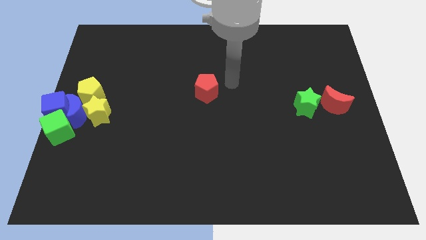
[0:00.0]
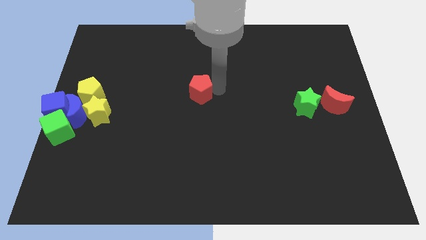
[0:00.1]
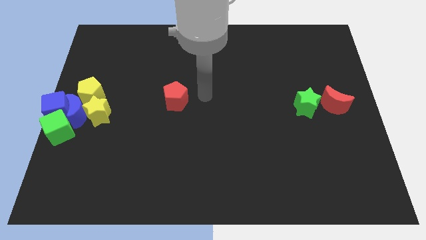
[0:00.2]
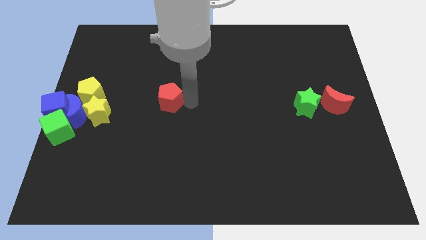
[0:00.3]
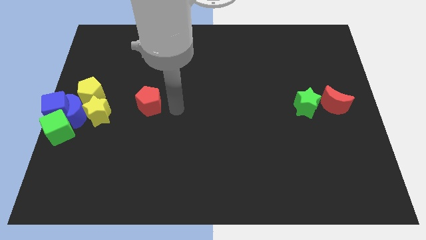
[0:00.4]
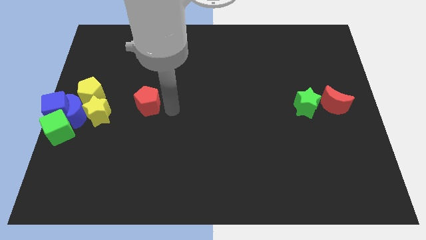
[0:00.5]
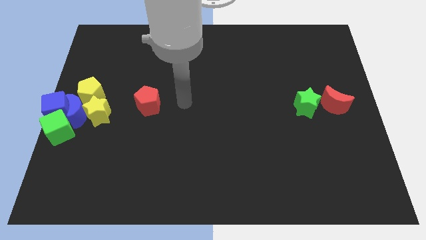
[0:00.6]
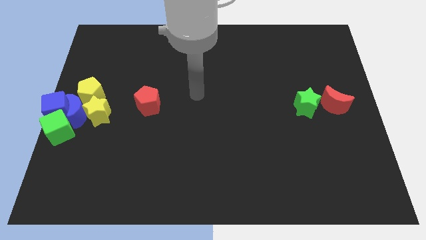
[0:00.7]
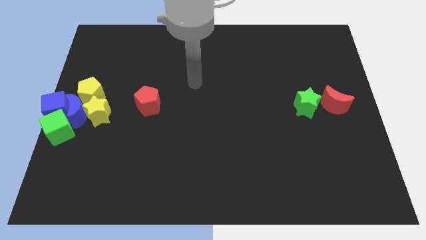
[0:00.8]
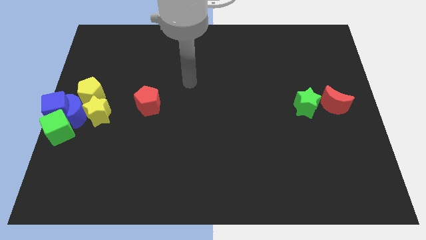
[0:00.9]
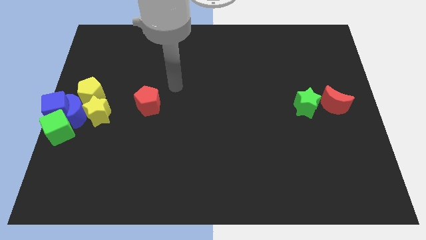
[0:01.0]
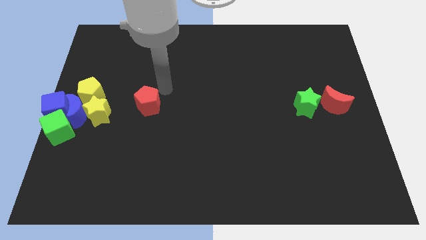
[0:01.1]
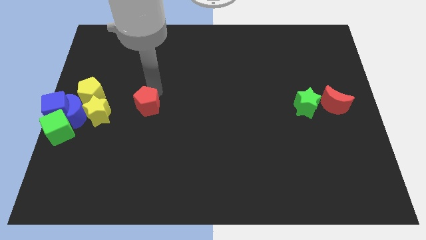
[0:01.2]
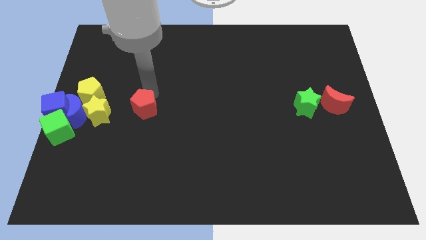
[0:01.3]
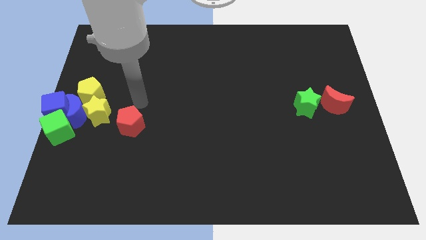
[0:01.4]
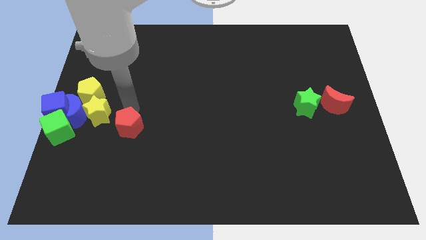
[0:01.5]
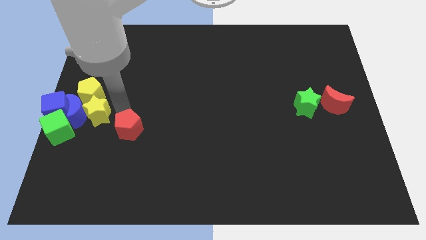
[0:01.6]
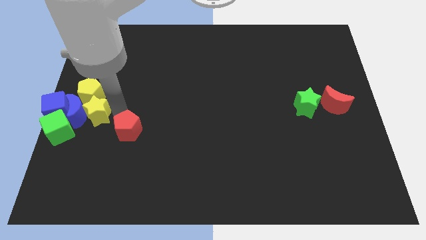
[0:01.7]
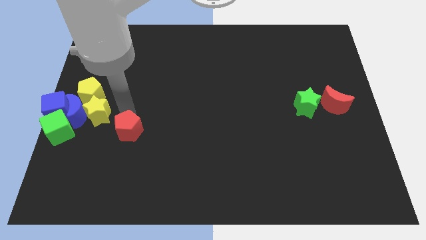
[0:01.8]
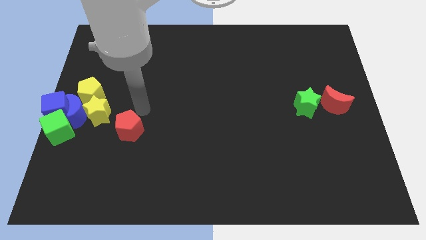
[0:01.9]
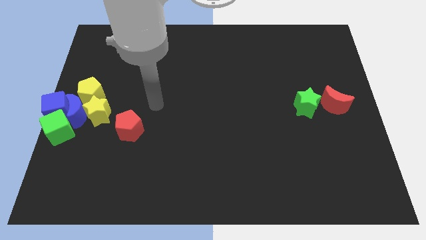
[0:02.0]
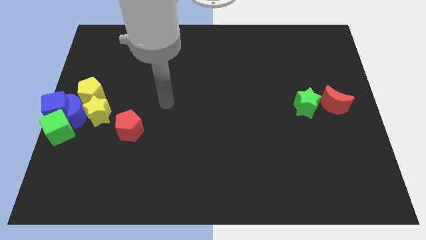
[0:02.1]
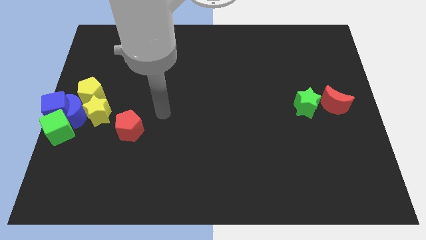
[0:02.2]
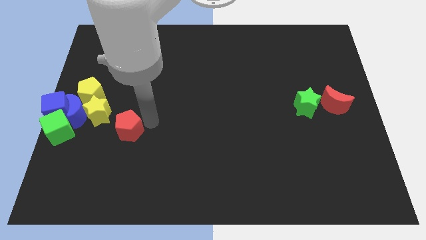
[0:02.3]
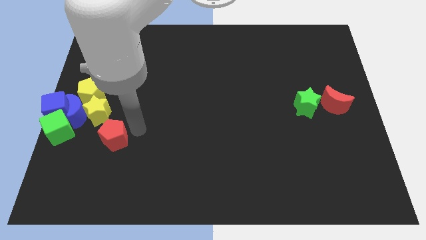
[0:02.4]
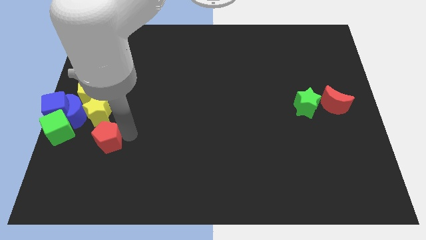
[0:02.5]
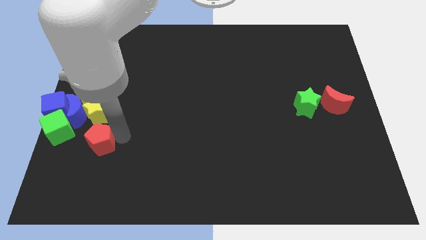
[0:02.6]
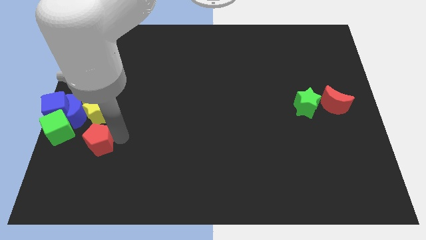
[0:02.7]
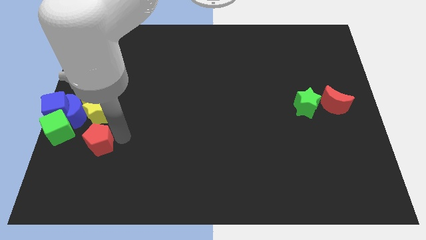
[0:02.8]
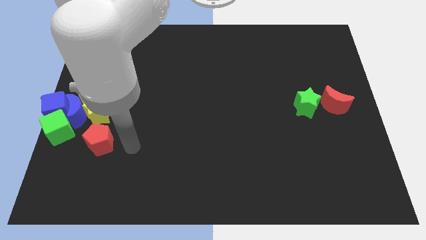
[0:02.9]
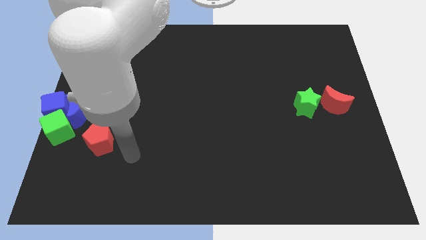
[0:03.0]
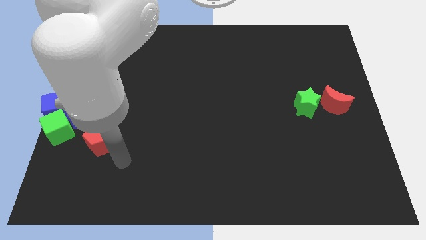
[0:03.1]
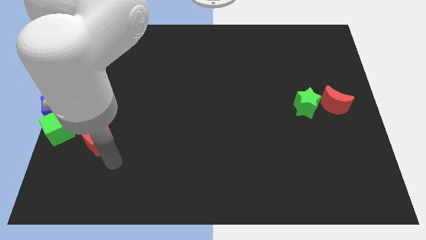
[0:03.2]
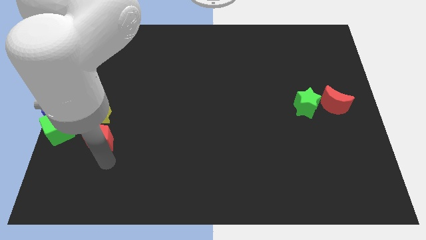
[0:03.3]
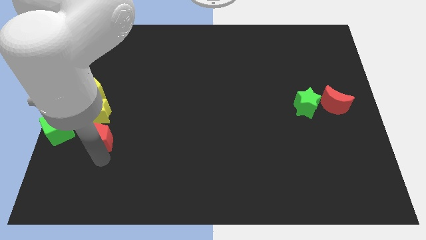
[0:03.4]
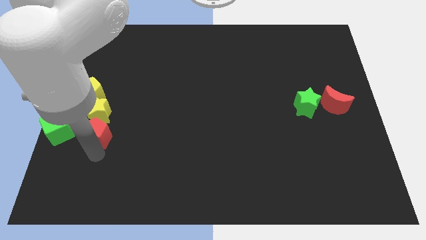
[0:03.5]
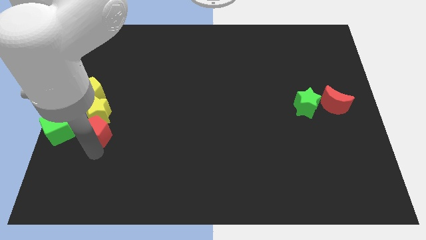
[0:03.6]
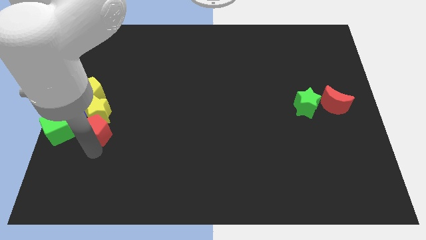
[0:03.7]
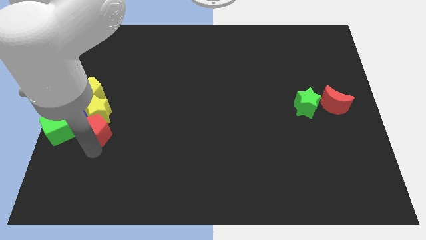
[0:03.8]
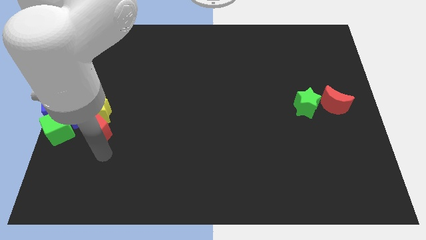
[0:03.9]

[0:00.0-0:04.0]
drag the red pentagon to the bottom side of the yellow star

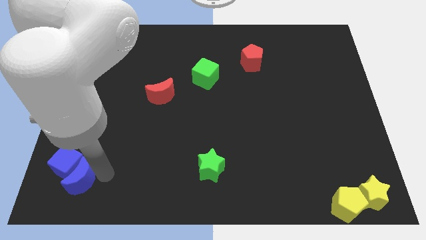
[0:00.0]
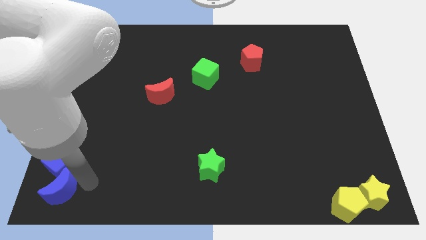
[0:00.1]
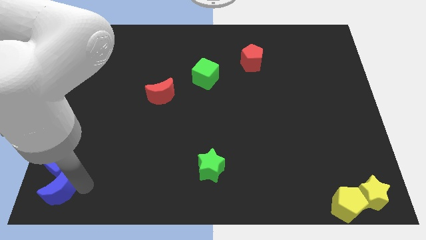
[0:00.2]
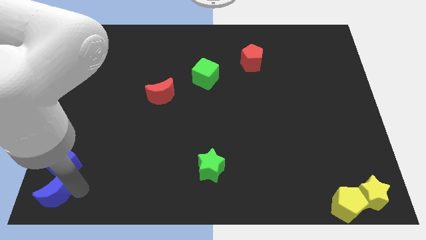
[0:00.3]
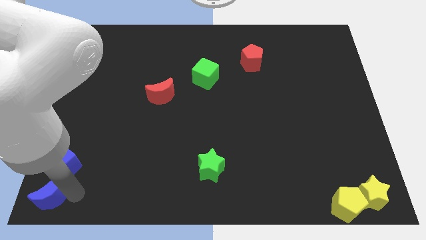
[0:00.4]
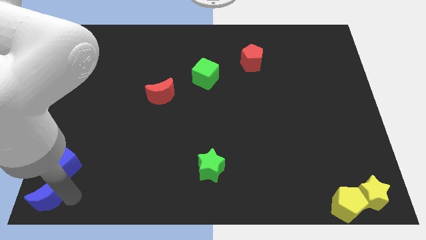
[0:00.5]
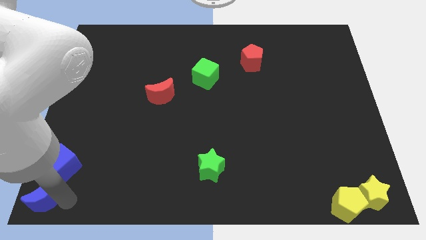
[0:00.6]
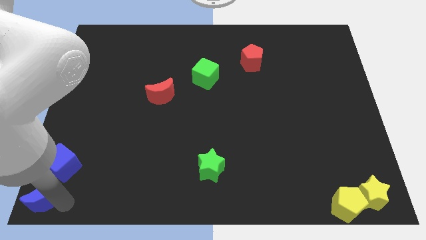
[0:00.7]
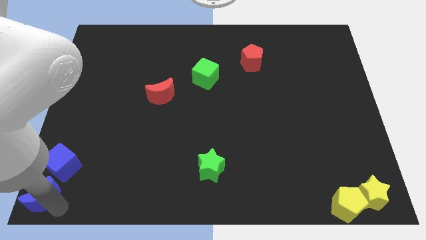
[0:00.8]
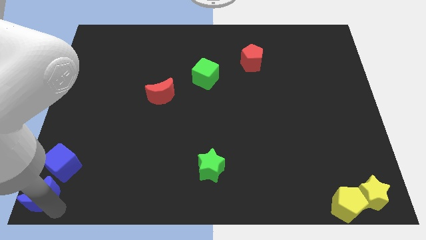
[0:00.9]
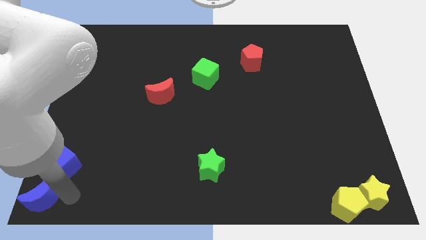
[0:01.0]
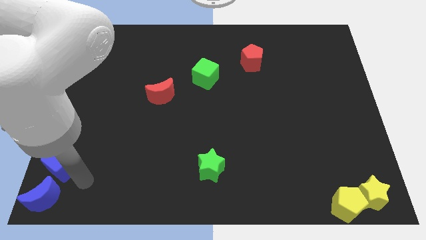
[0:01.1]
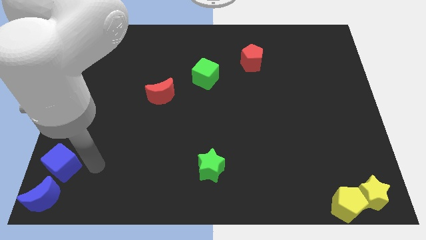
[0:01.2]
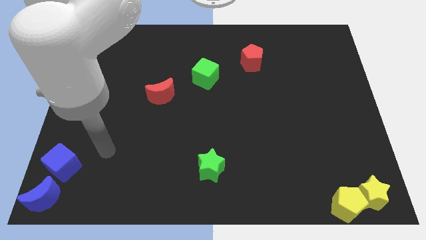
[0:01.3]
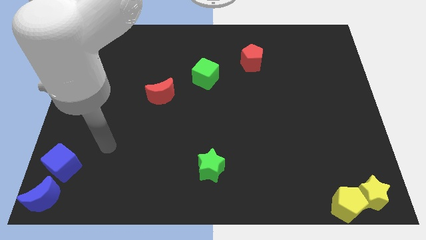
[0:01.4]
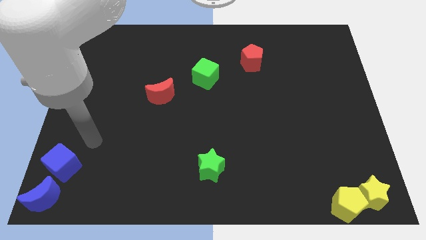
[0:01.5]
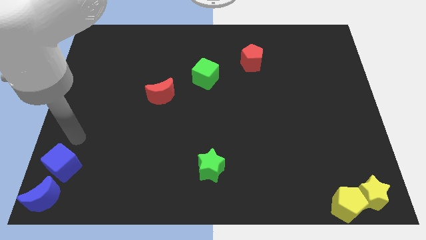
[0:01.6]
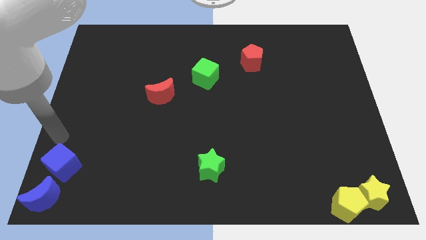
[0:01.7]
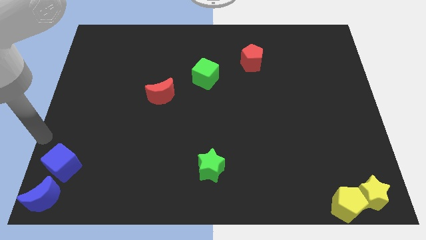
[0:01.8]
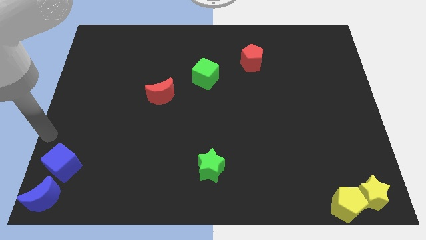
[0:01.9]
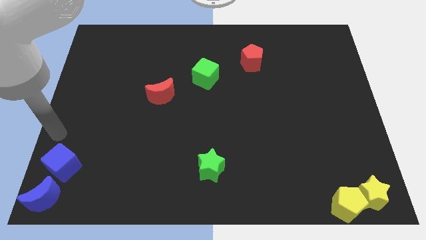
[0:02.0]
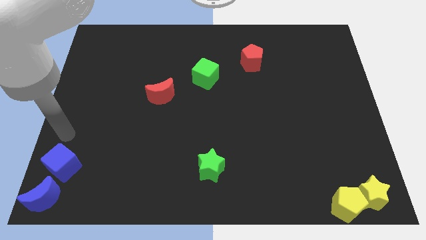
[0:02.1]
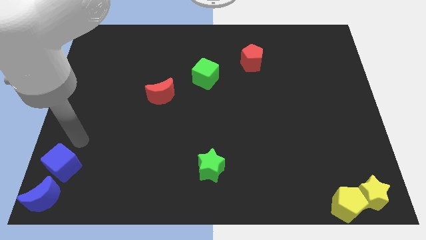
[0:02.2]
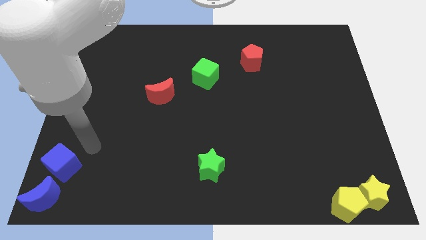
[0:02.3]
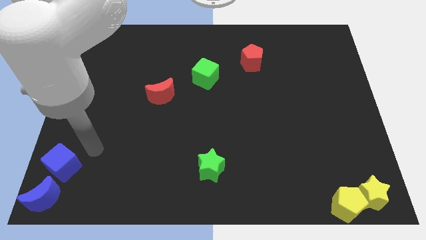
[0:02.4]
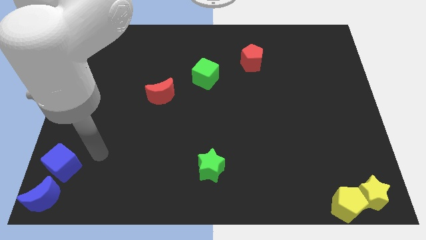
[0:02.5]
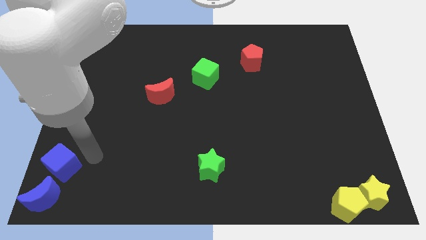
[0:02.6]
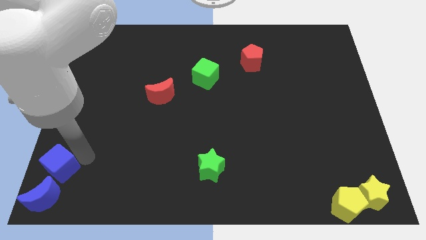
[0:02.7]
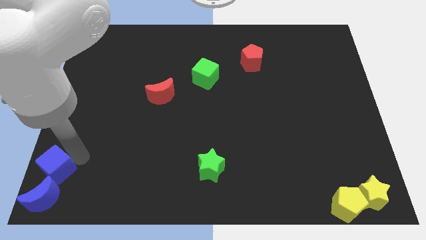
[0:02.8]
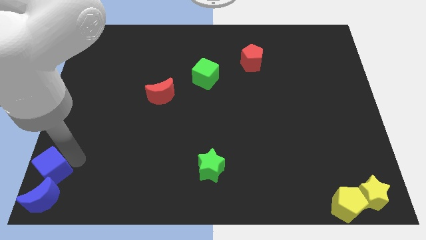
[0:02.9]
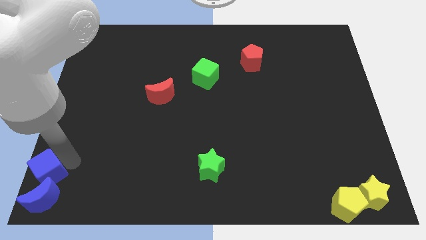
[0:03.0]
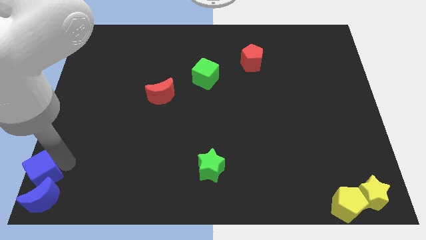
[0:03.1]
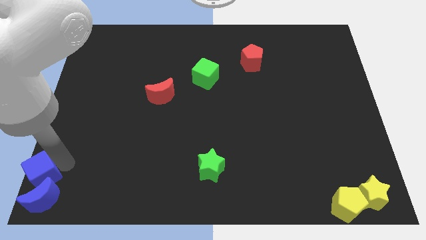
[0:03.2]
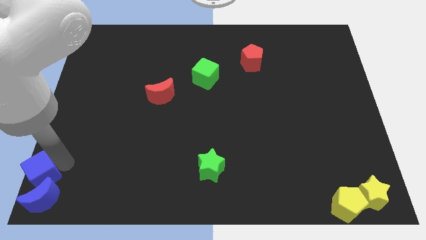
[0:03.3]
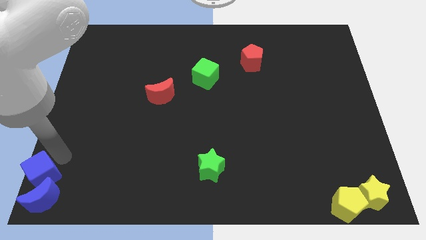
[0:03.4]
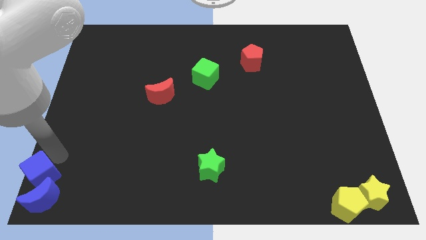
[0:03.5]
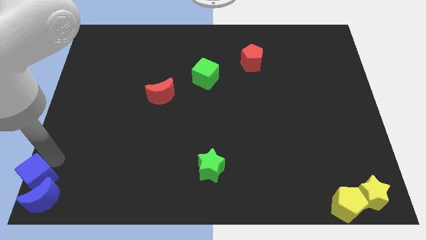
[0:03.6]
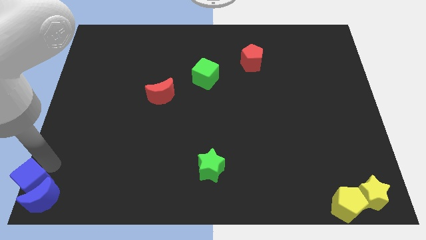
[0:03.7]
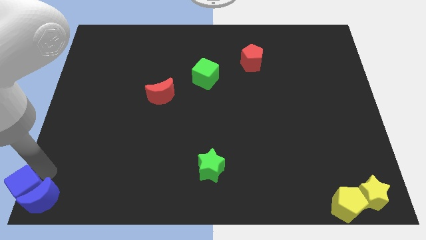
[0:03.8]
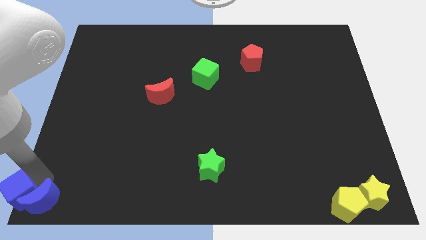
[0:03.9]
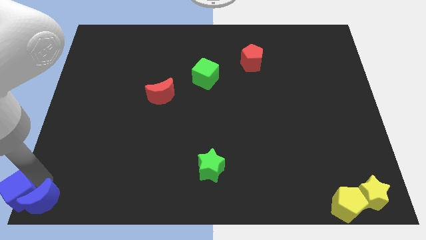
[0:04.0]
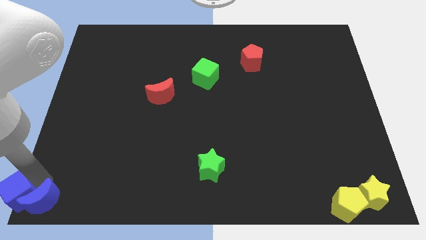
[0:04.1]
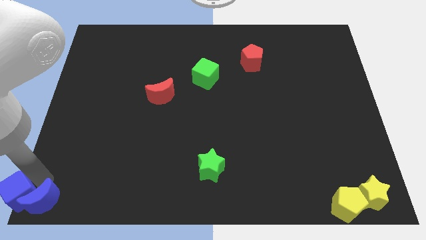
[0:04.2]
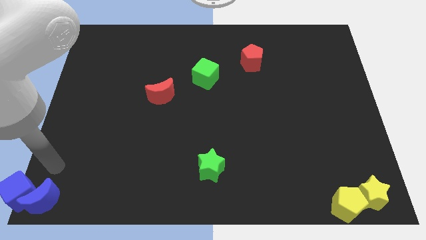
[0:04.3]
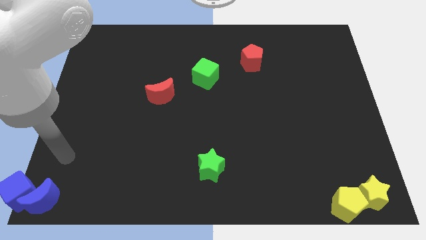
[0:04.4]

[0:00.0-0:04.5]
move blue cube and blue moon to the bottom left corner

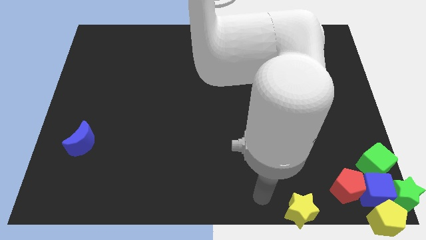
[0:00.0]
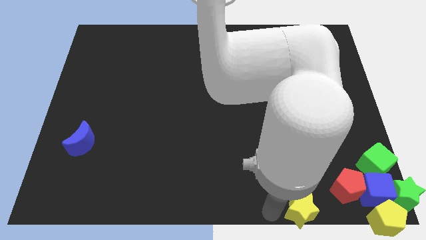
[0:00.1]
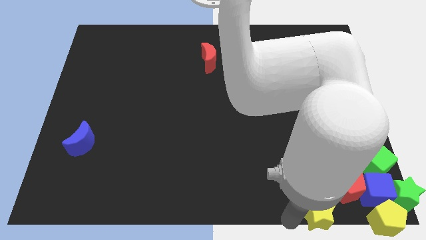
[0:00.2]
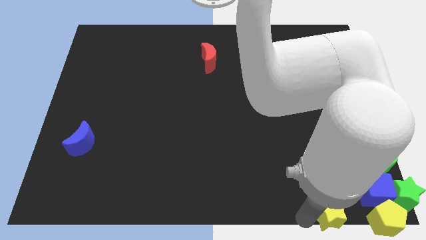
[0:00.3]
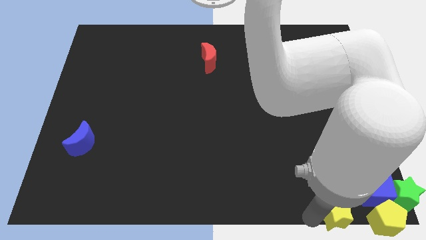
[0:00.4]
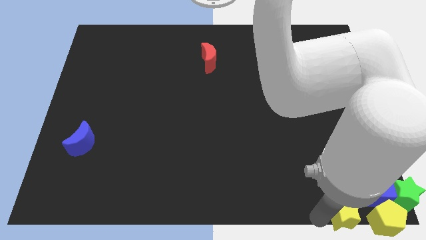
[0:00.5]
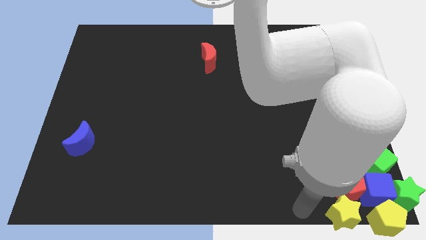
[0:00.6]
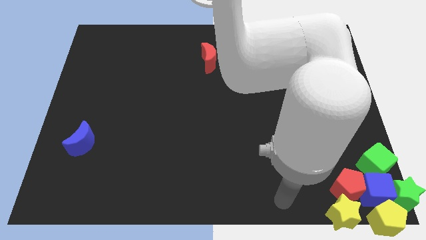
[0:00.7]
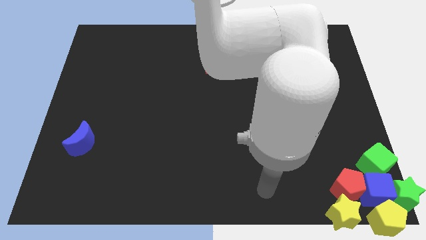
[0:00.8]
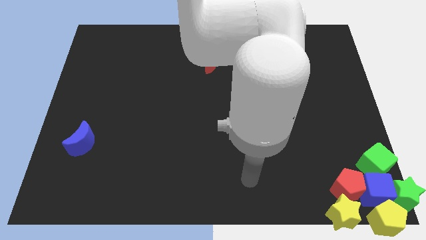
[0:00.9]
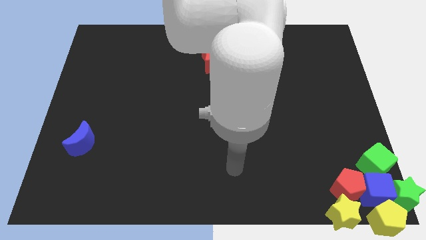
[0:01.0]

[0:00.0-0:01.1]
push the yellow star below the red pentagon
